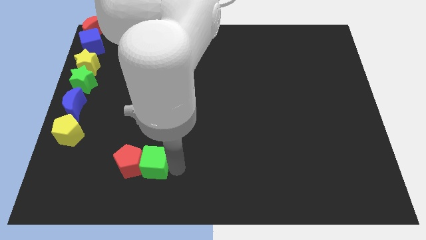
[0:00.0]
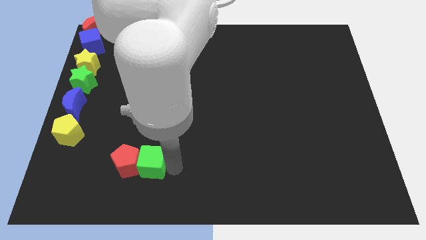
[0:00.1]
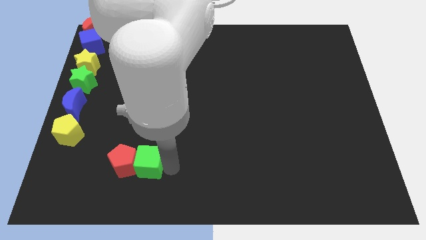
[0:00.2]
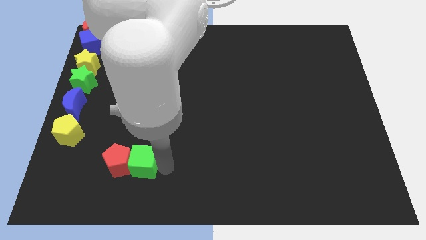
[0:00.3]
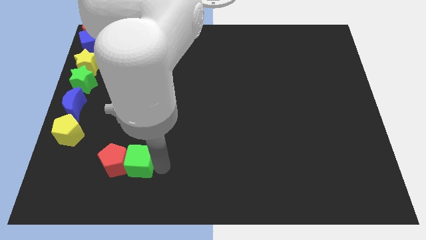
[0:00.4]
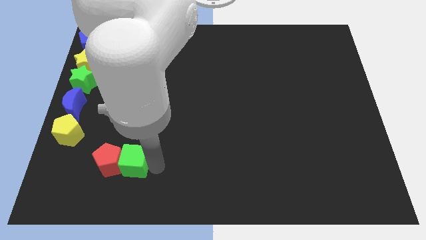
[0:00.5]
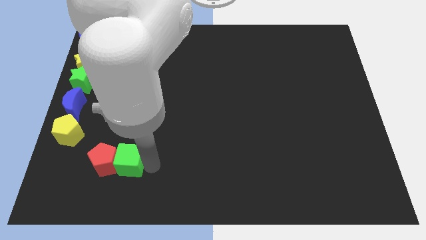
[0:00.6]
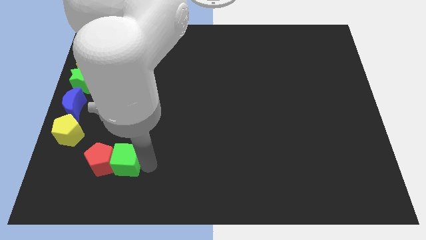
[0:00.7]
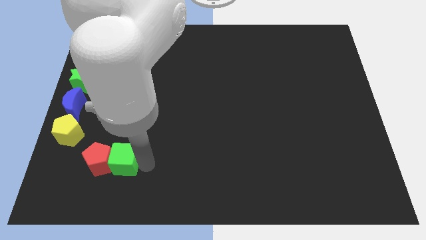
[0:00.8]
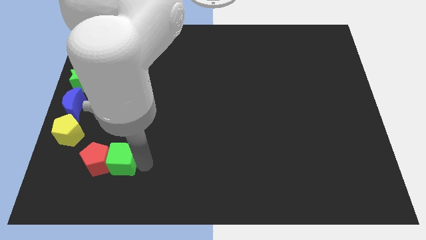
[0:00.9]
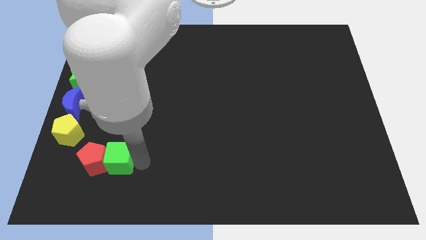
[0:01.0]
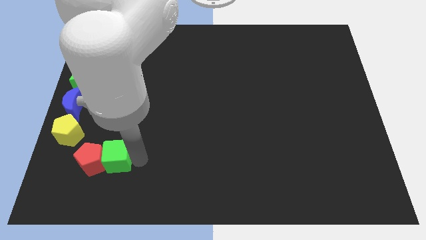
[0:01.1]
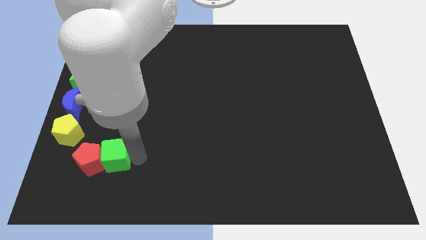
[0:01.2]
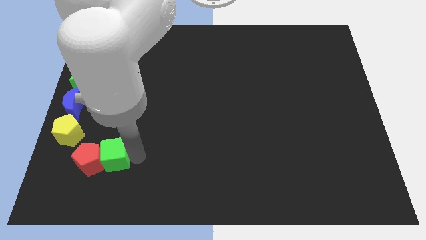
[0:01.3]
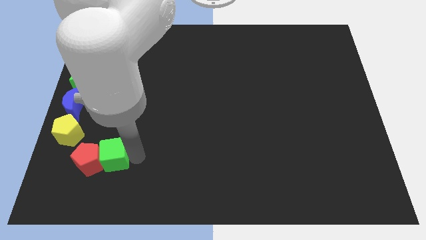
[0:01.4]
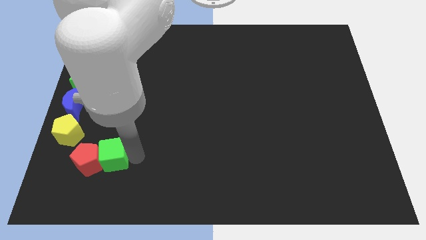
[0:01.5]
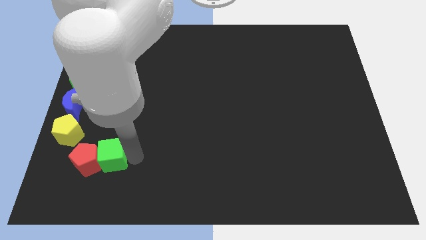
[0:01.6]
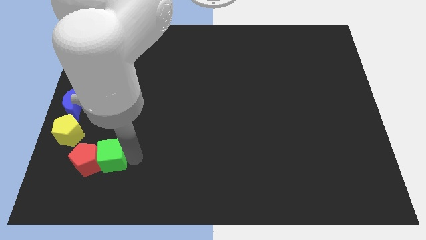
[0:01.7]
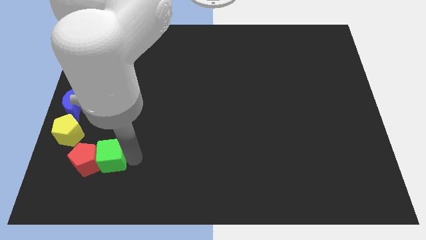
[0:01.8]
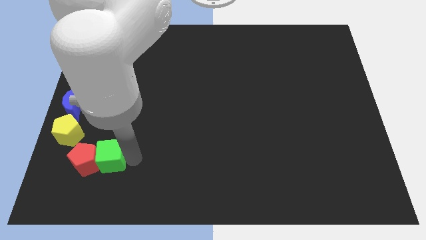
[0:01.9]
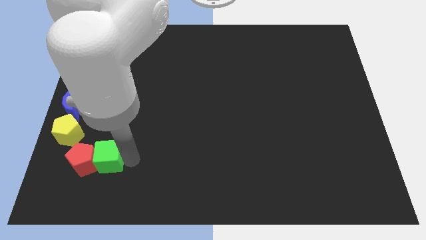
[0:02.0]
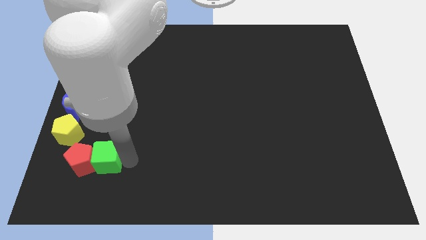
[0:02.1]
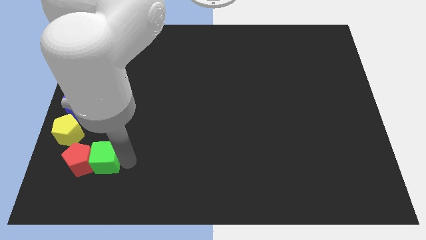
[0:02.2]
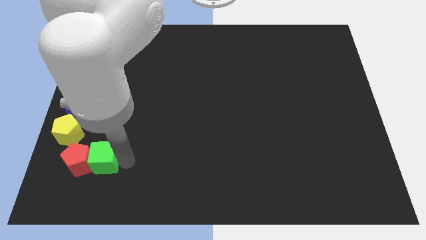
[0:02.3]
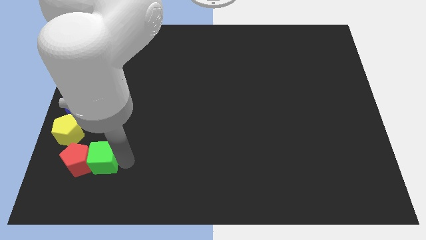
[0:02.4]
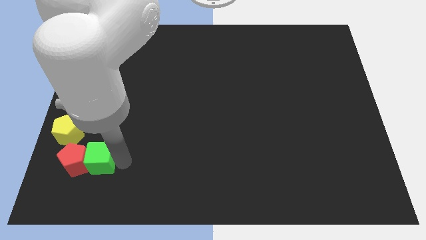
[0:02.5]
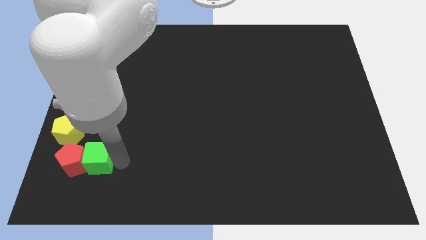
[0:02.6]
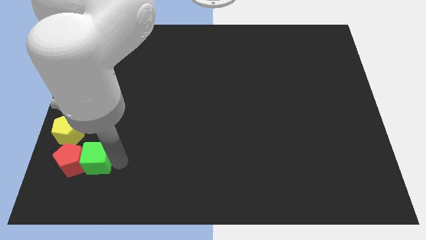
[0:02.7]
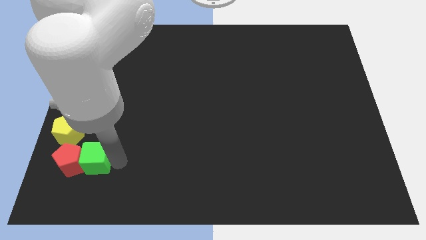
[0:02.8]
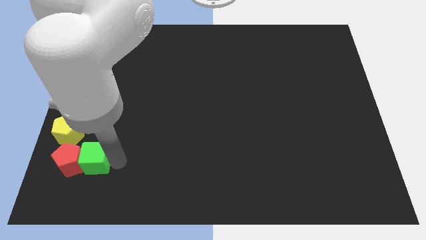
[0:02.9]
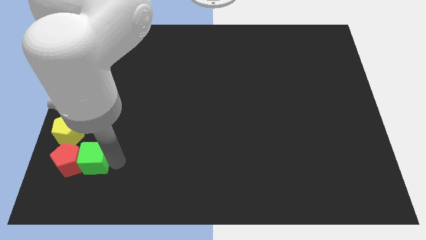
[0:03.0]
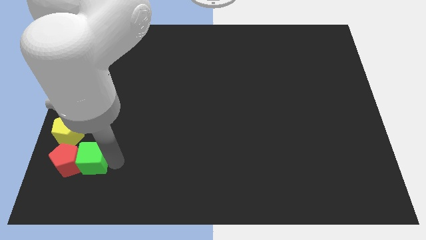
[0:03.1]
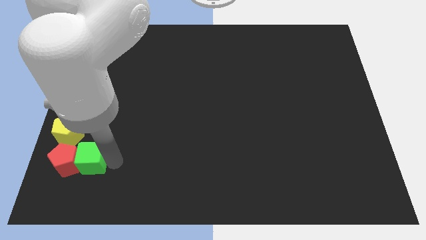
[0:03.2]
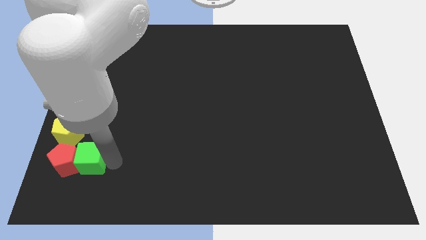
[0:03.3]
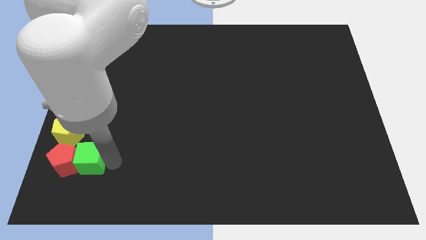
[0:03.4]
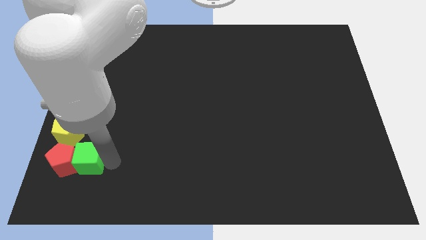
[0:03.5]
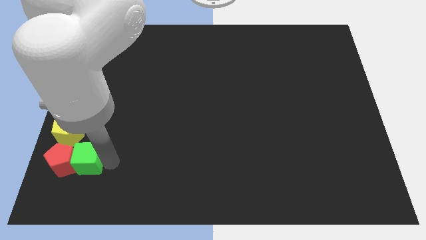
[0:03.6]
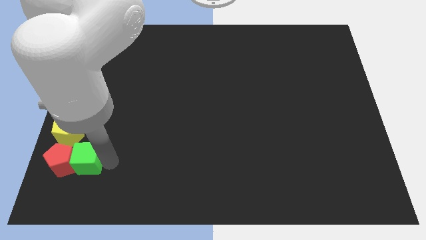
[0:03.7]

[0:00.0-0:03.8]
push the green cube into the red pentagon to the left

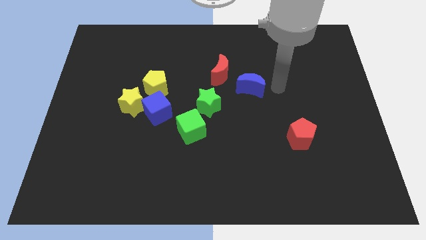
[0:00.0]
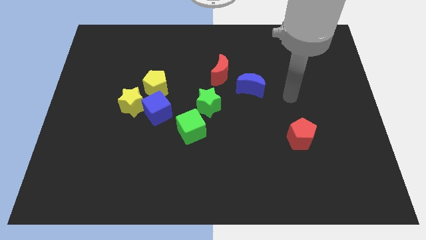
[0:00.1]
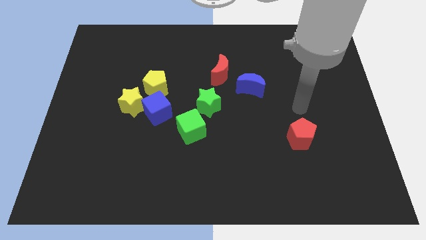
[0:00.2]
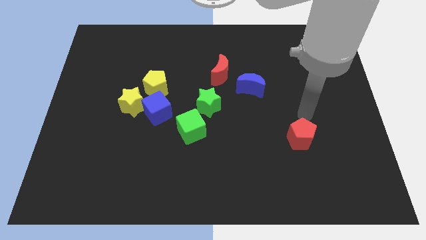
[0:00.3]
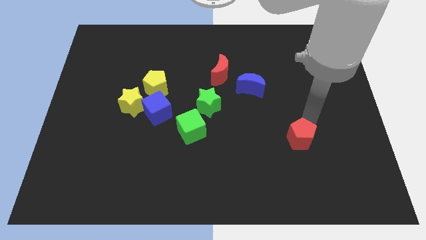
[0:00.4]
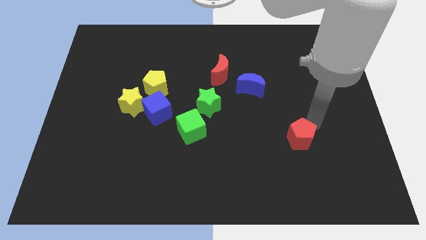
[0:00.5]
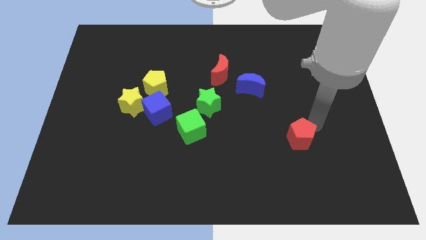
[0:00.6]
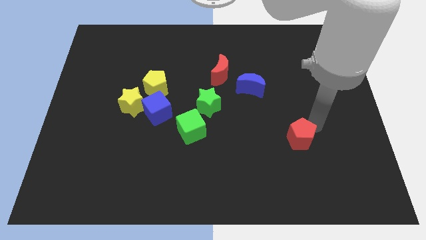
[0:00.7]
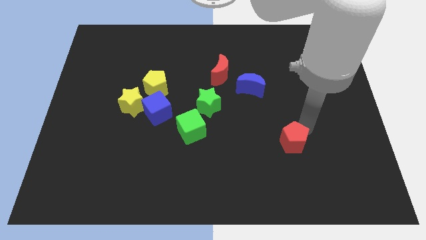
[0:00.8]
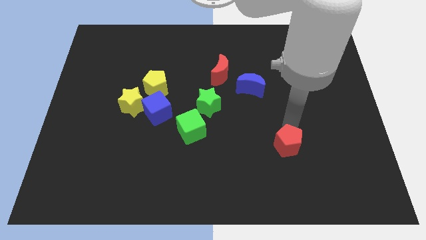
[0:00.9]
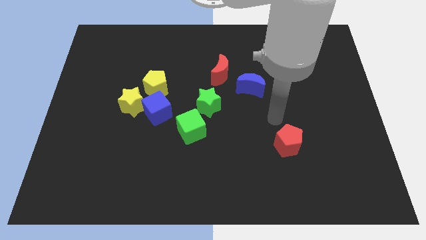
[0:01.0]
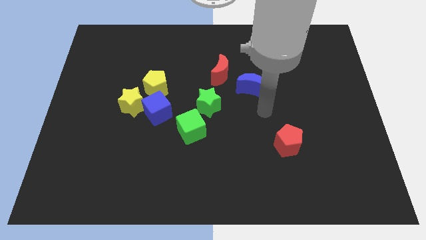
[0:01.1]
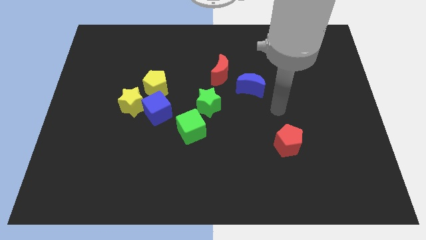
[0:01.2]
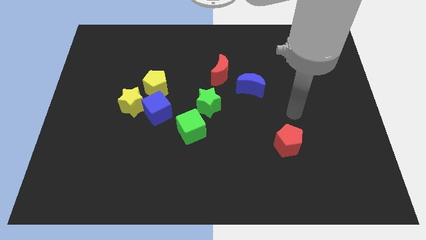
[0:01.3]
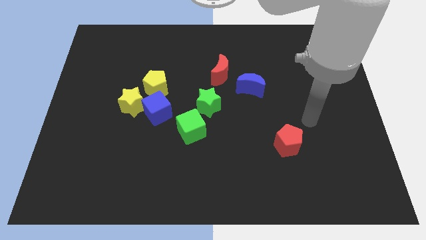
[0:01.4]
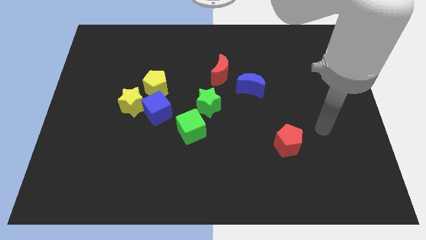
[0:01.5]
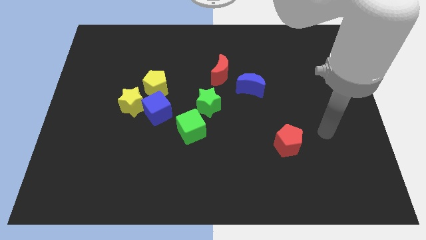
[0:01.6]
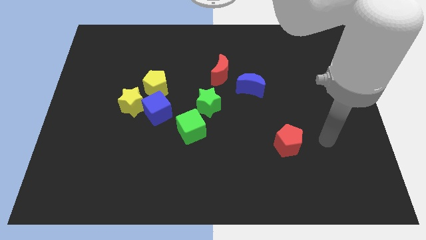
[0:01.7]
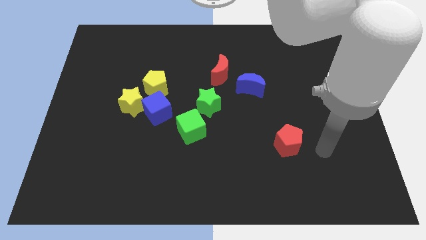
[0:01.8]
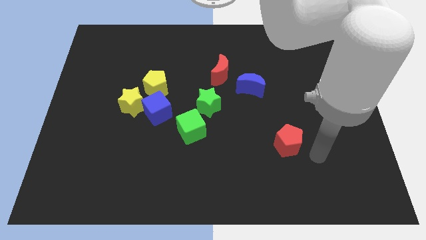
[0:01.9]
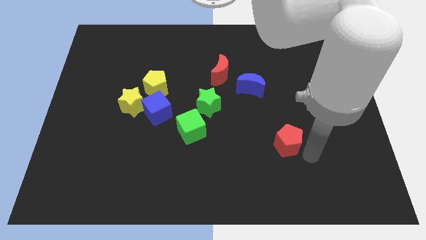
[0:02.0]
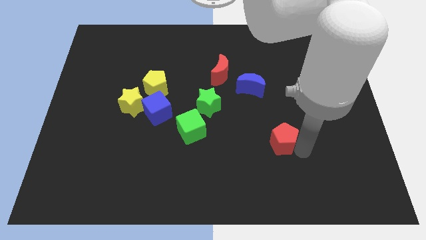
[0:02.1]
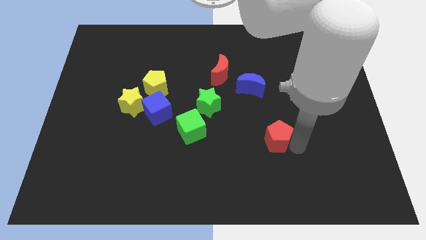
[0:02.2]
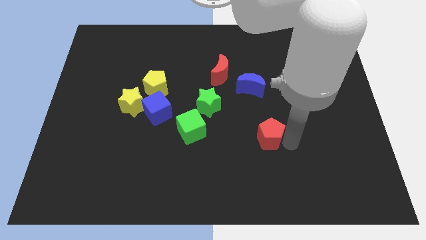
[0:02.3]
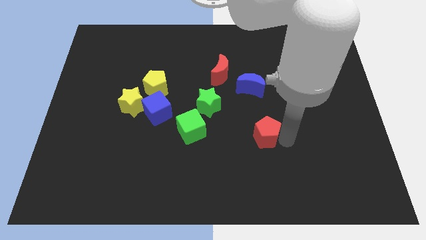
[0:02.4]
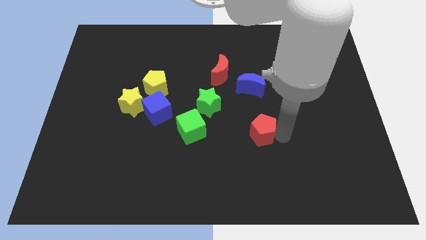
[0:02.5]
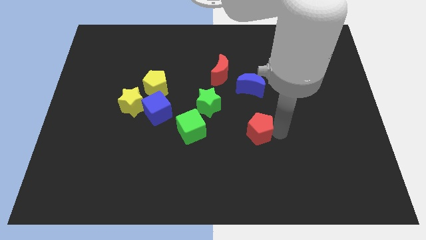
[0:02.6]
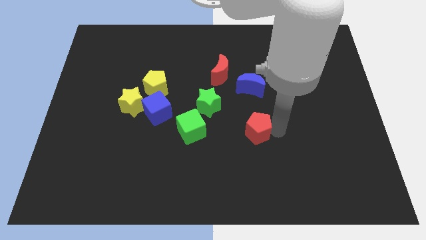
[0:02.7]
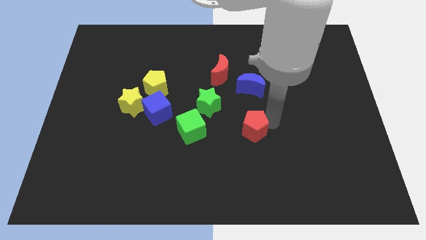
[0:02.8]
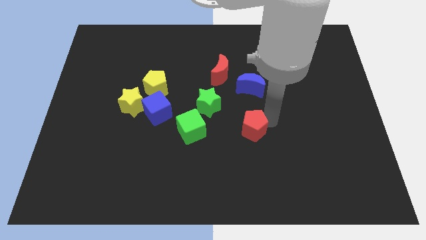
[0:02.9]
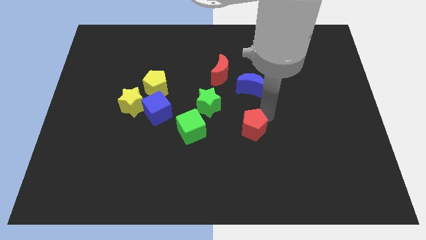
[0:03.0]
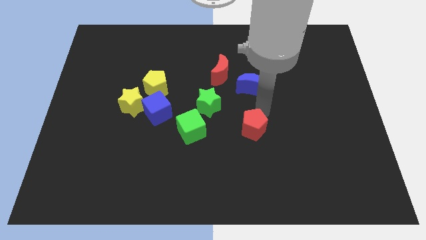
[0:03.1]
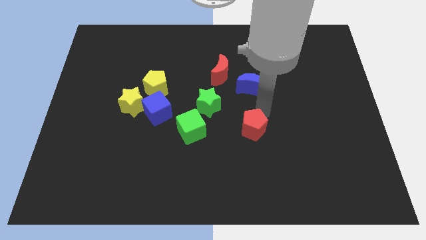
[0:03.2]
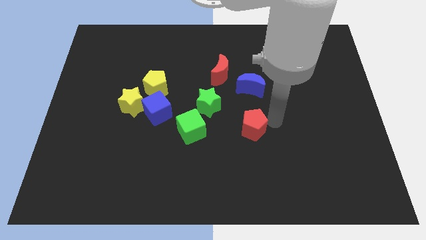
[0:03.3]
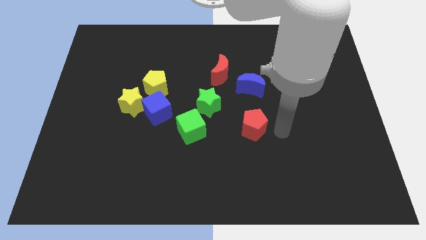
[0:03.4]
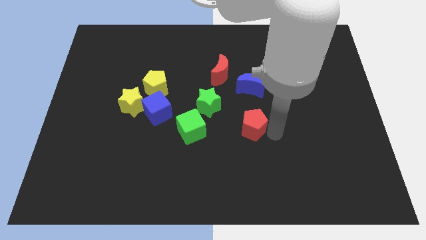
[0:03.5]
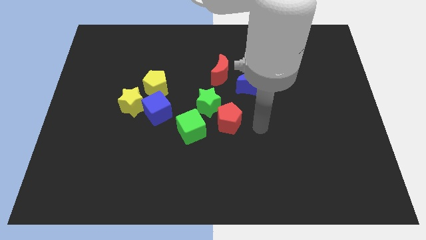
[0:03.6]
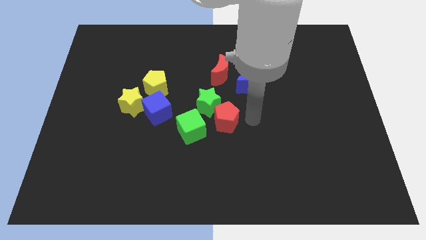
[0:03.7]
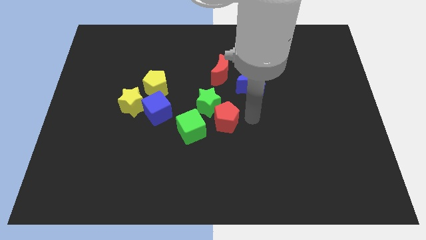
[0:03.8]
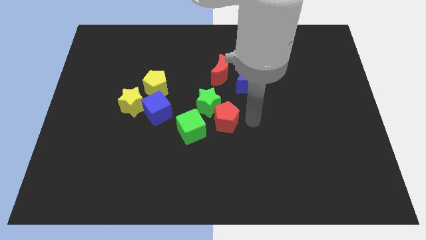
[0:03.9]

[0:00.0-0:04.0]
push the red pentagon towards green star

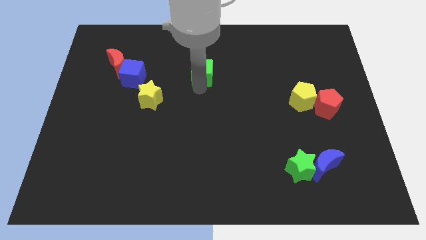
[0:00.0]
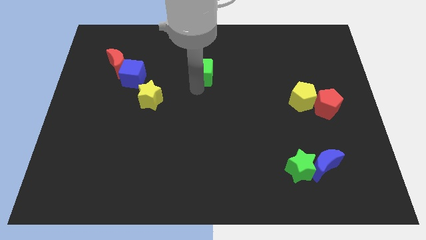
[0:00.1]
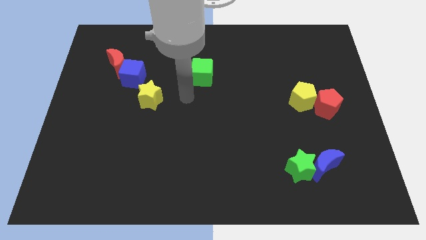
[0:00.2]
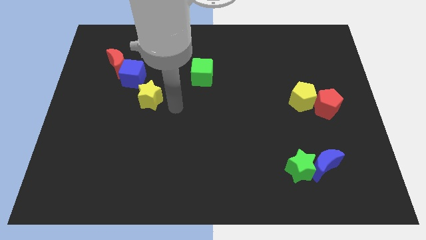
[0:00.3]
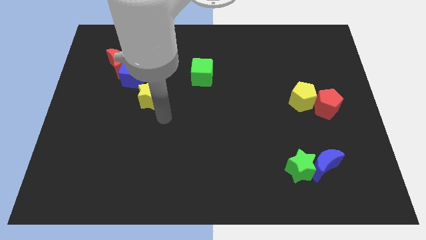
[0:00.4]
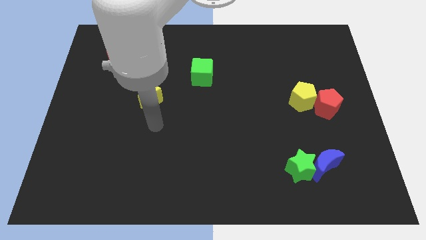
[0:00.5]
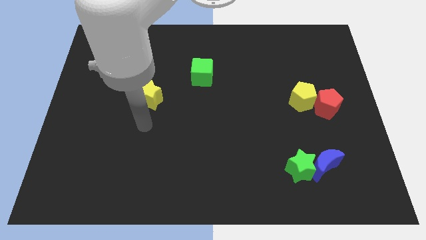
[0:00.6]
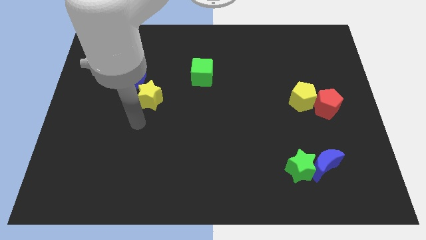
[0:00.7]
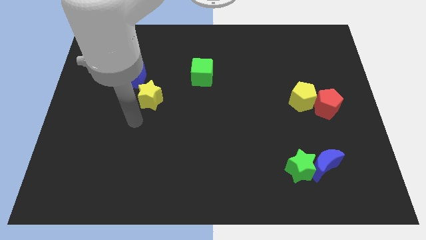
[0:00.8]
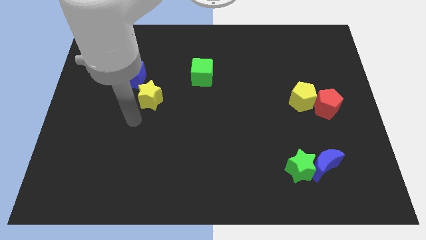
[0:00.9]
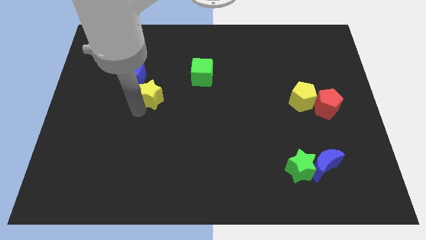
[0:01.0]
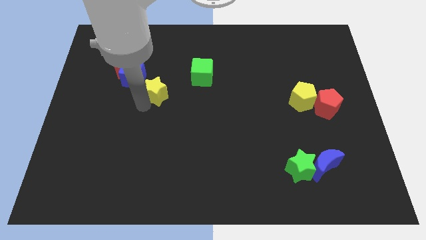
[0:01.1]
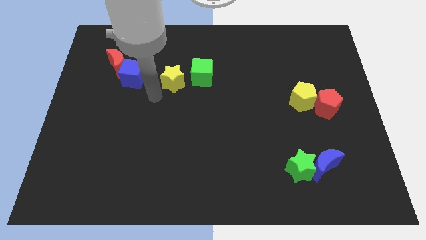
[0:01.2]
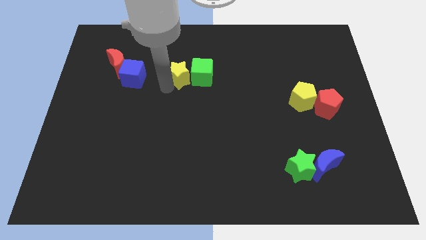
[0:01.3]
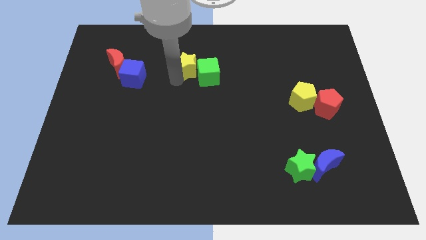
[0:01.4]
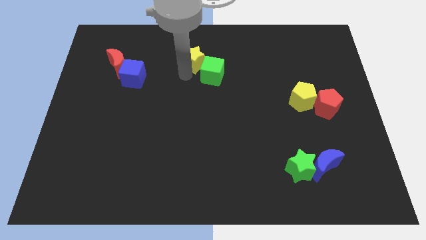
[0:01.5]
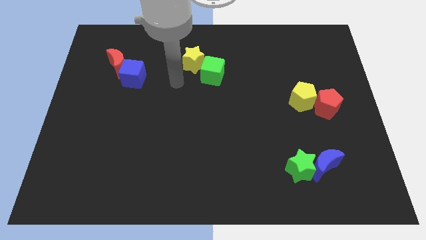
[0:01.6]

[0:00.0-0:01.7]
move the yellow star into the green cube
